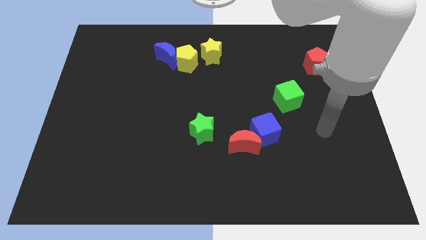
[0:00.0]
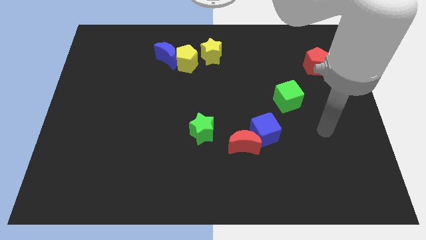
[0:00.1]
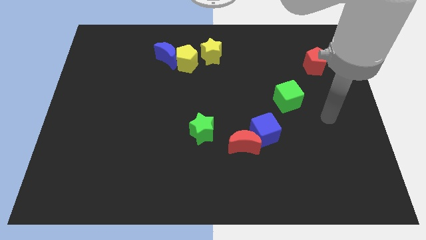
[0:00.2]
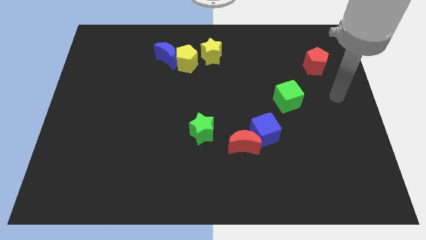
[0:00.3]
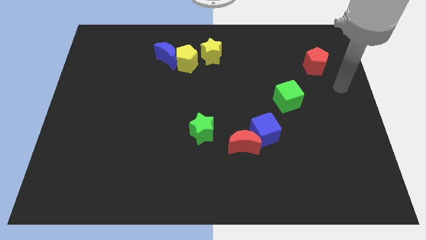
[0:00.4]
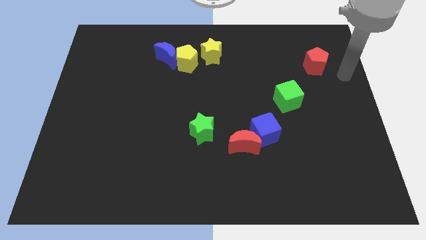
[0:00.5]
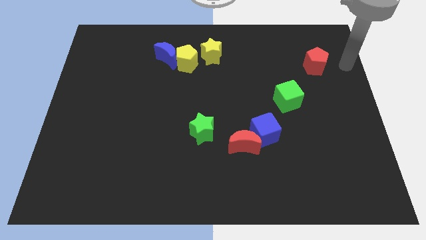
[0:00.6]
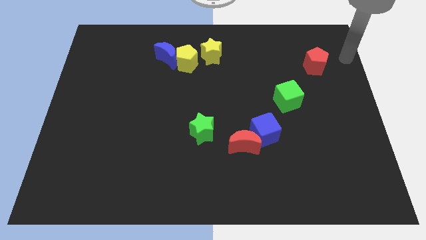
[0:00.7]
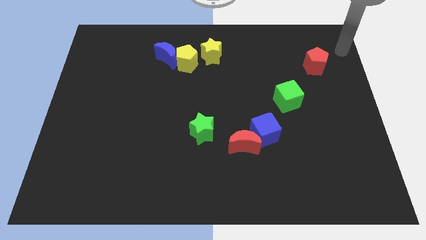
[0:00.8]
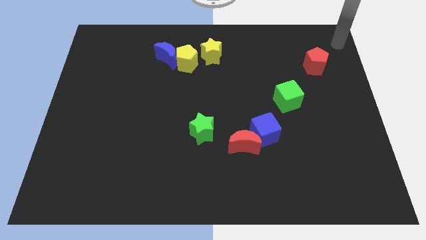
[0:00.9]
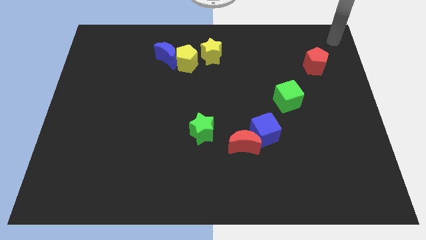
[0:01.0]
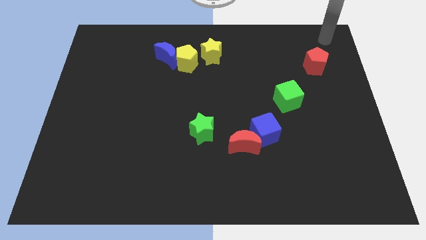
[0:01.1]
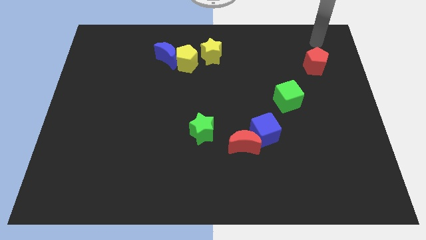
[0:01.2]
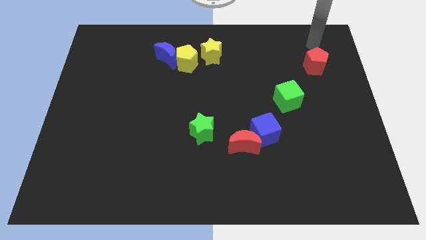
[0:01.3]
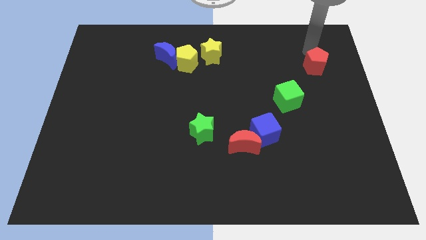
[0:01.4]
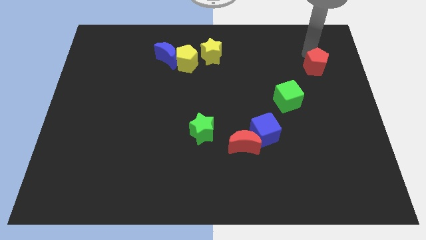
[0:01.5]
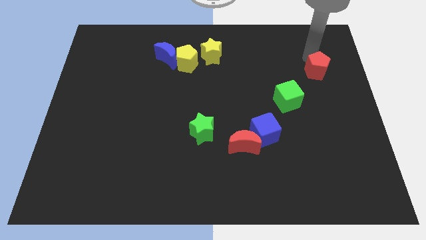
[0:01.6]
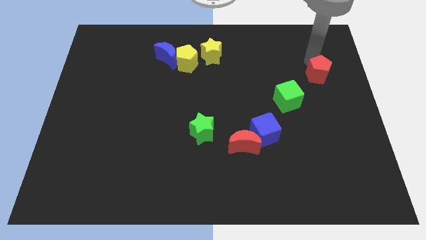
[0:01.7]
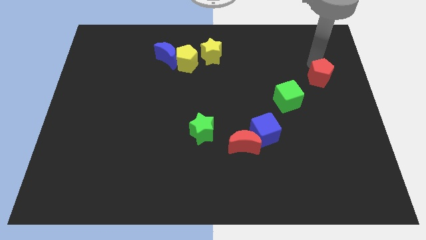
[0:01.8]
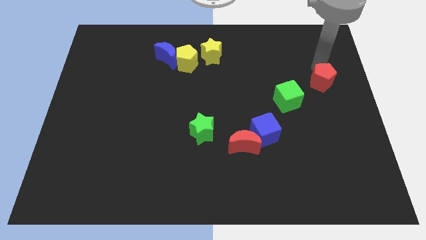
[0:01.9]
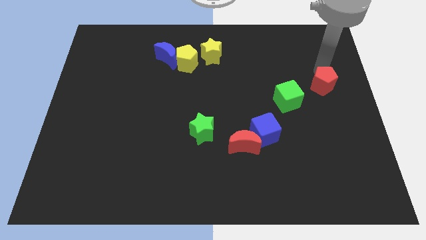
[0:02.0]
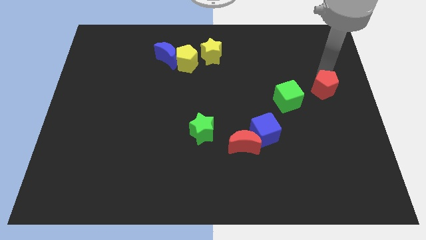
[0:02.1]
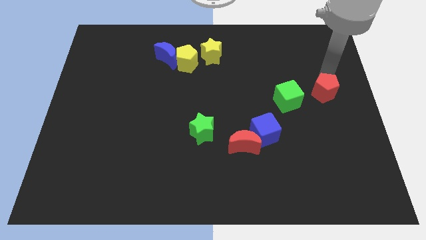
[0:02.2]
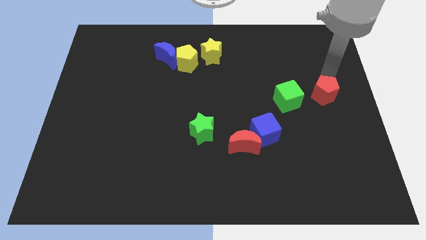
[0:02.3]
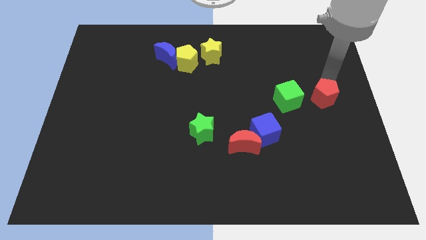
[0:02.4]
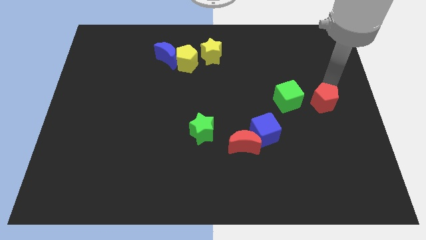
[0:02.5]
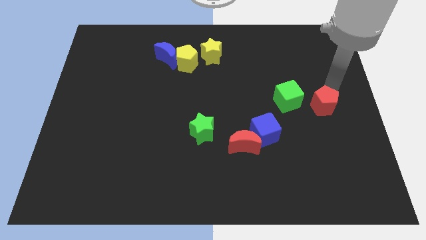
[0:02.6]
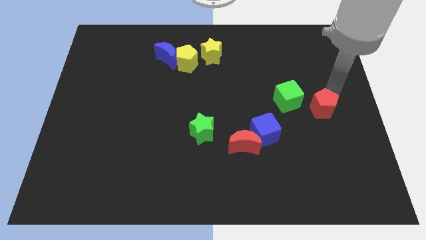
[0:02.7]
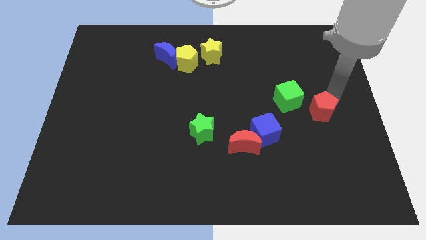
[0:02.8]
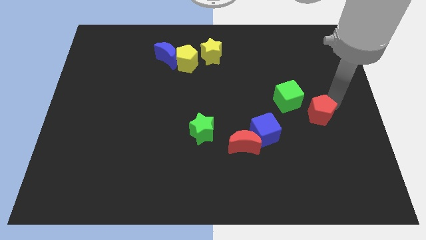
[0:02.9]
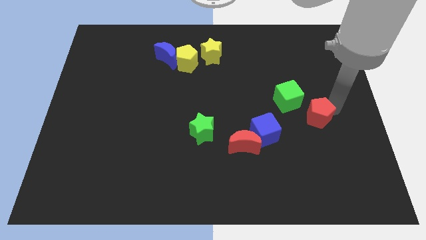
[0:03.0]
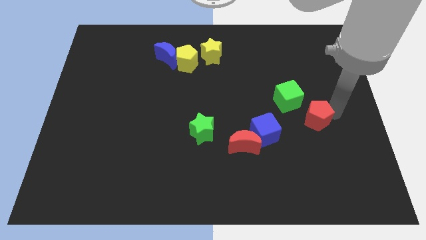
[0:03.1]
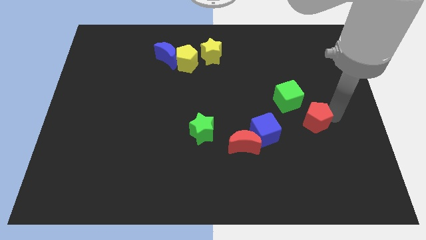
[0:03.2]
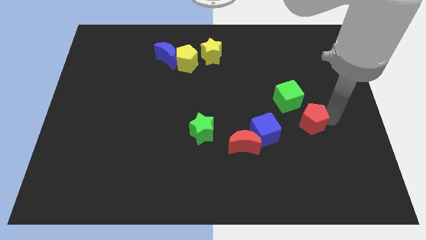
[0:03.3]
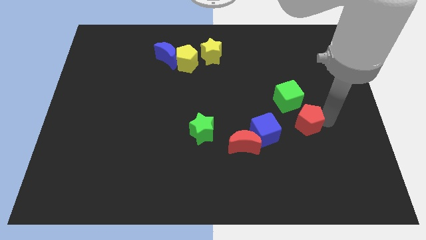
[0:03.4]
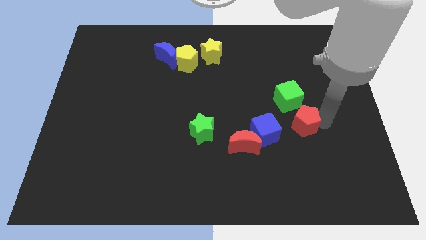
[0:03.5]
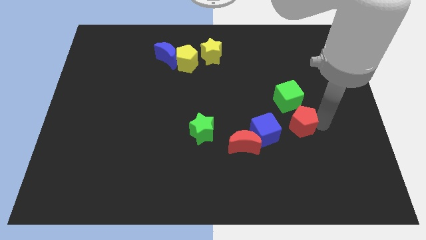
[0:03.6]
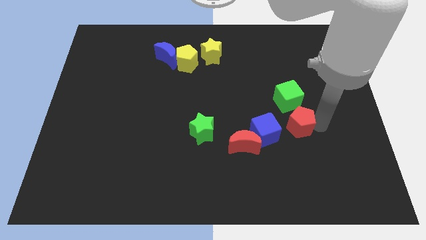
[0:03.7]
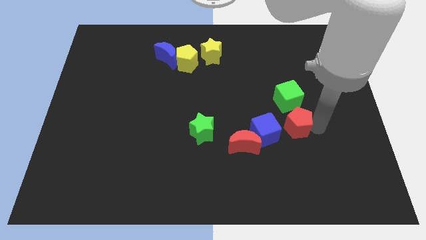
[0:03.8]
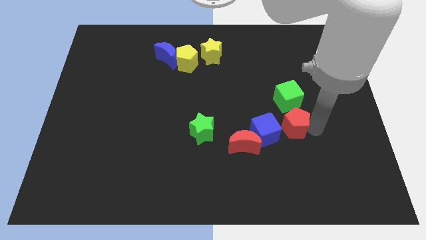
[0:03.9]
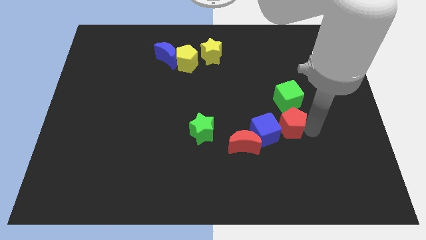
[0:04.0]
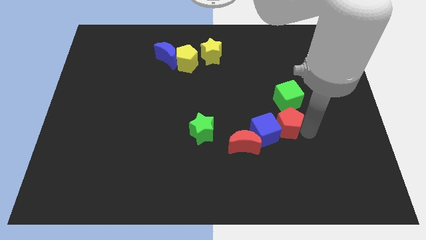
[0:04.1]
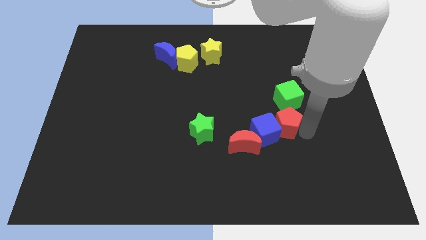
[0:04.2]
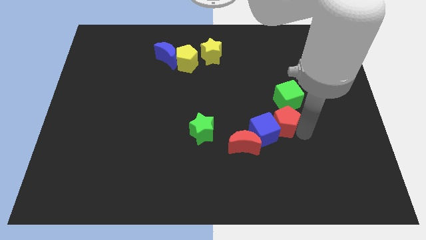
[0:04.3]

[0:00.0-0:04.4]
slide the red pentagon towards the blue cube

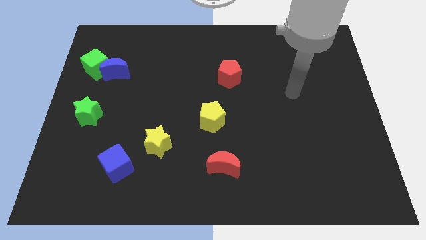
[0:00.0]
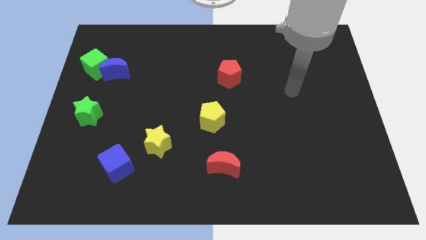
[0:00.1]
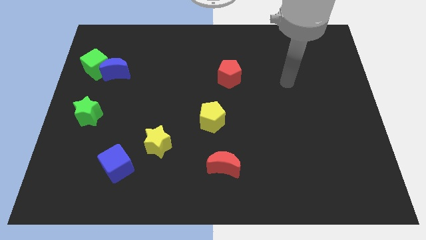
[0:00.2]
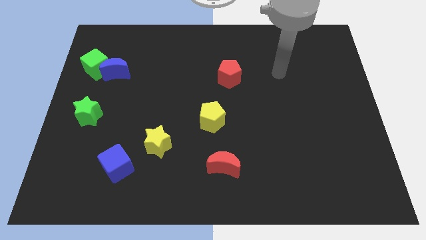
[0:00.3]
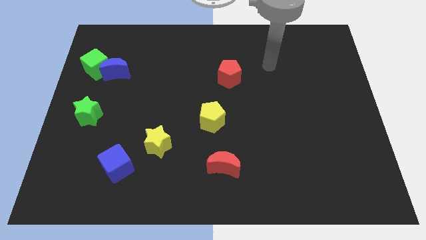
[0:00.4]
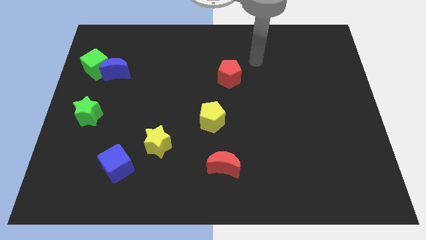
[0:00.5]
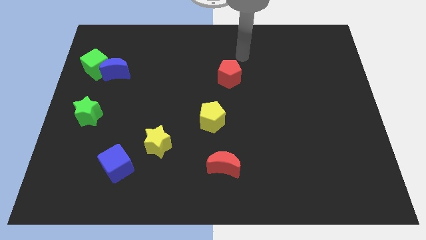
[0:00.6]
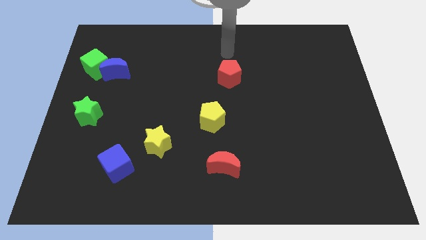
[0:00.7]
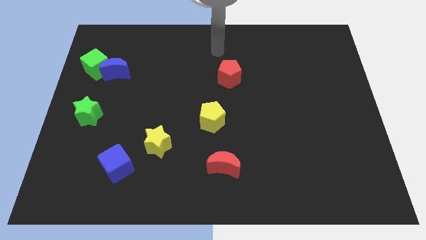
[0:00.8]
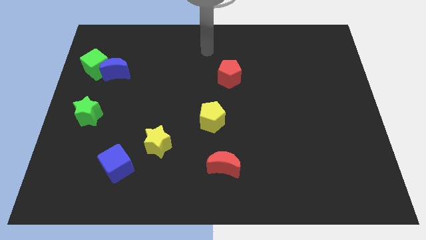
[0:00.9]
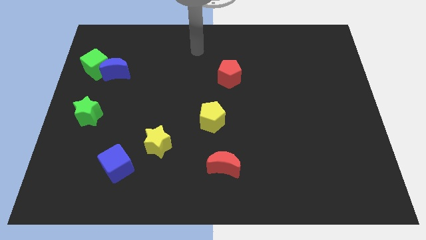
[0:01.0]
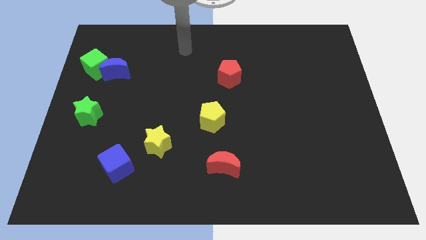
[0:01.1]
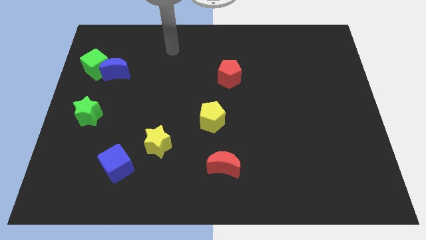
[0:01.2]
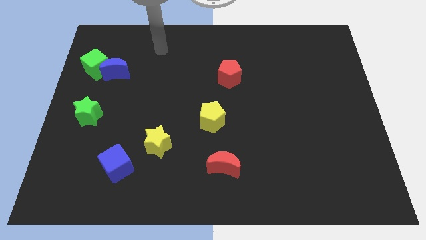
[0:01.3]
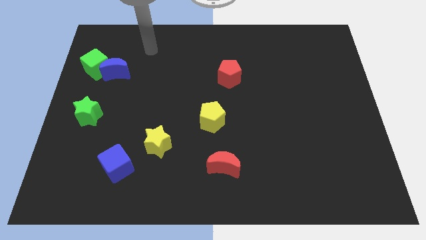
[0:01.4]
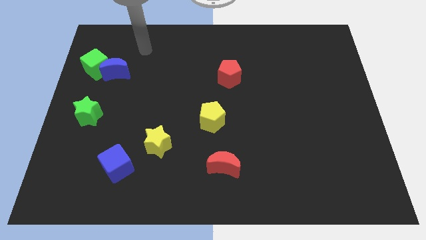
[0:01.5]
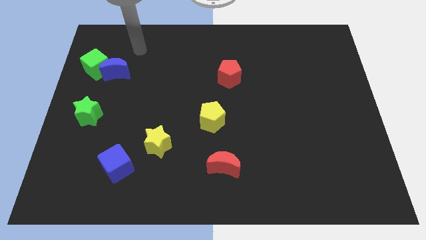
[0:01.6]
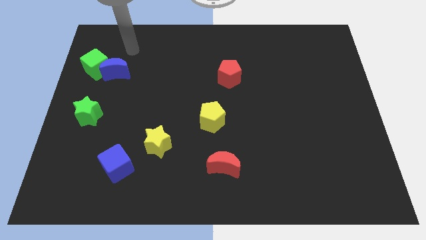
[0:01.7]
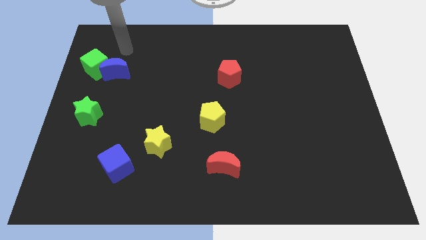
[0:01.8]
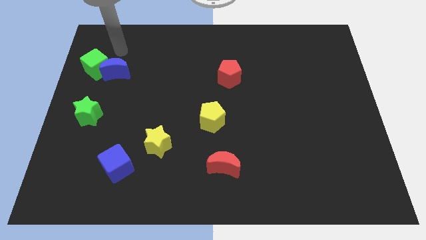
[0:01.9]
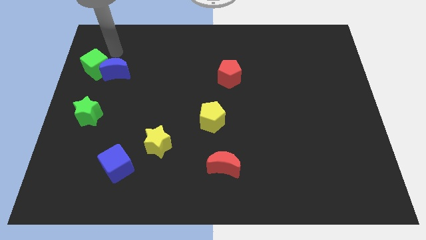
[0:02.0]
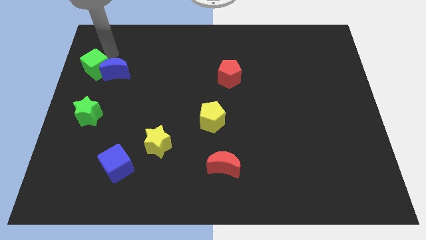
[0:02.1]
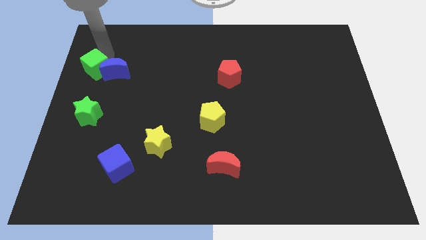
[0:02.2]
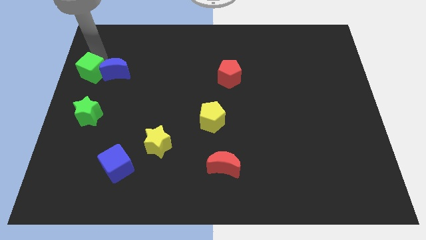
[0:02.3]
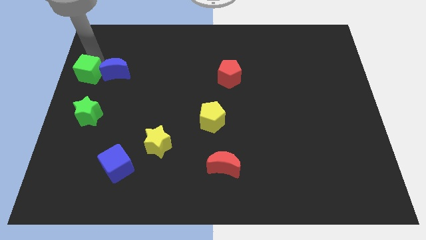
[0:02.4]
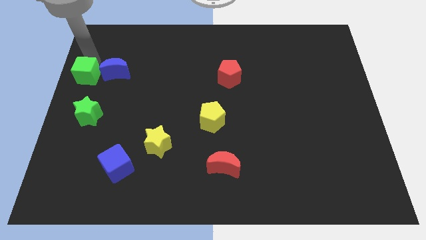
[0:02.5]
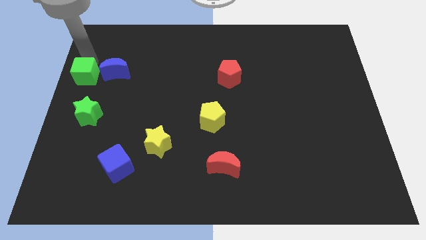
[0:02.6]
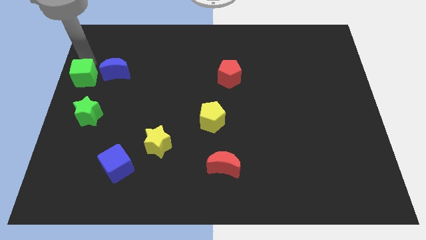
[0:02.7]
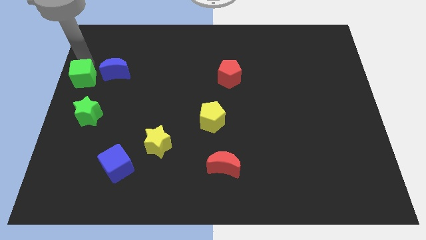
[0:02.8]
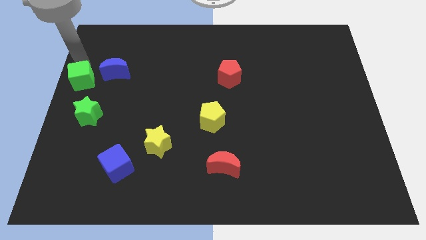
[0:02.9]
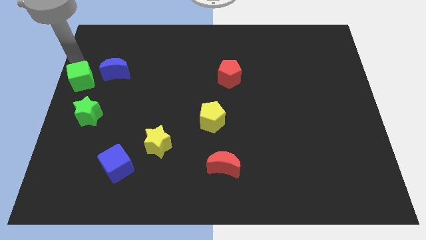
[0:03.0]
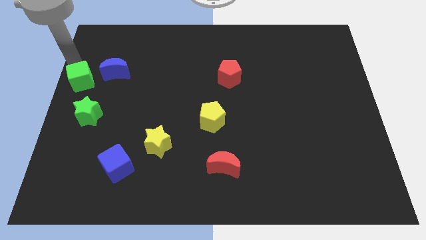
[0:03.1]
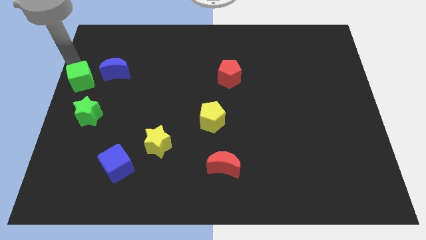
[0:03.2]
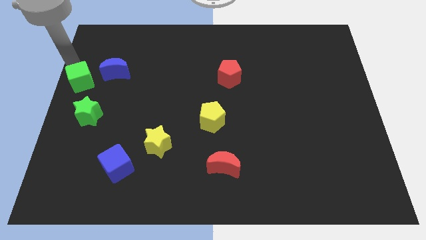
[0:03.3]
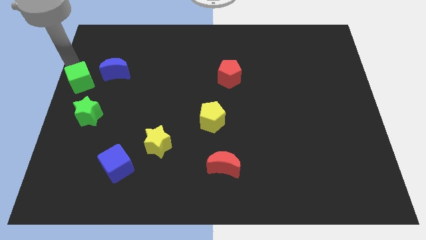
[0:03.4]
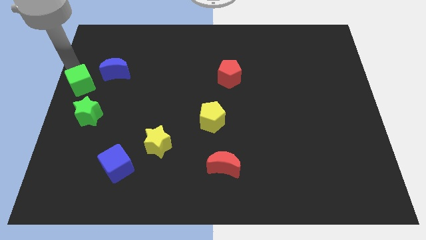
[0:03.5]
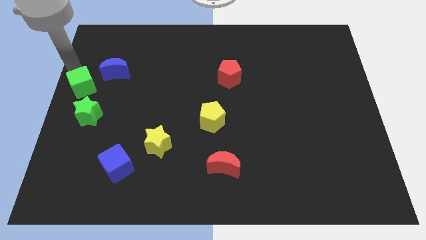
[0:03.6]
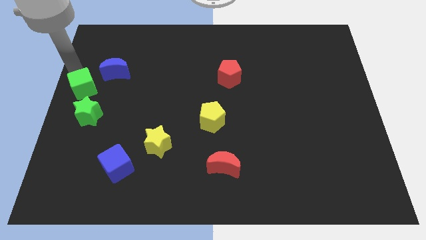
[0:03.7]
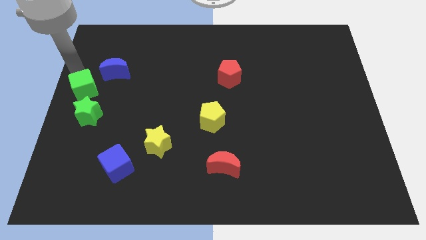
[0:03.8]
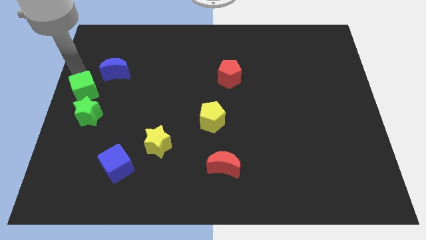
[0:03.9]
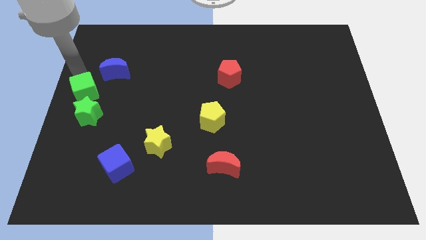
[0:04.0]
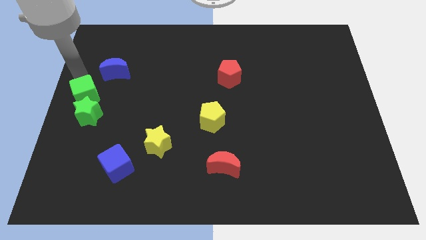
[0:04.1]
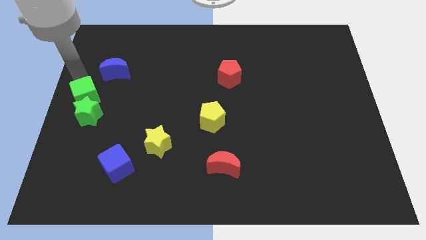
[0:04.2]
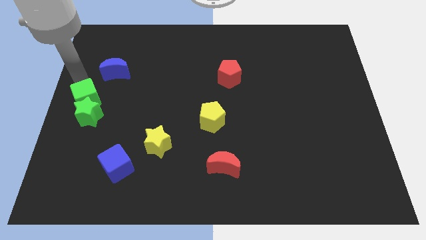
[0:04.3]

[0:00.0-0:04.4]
push the green cube next to the green star
